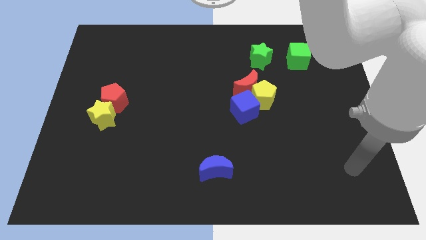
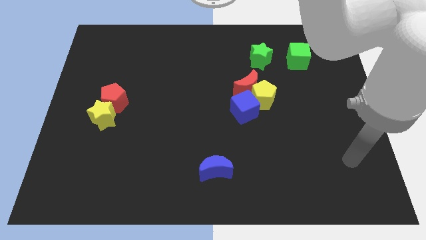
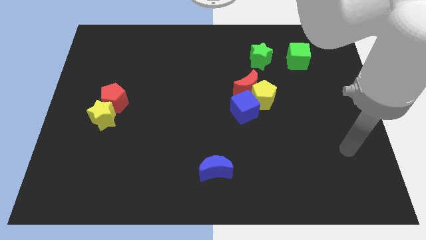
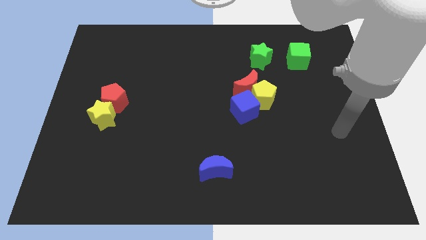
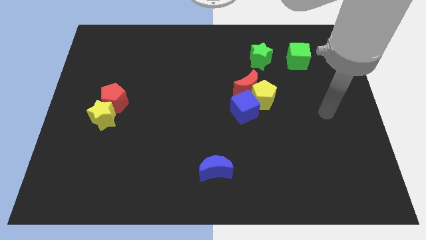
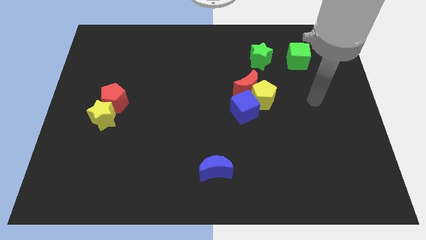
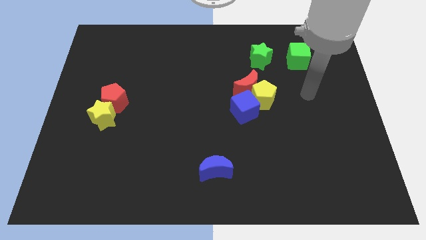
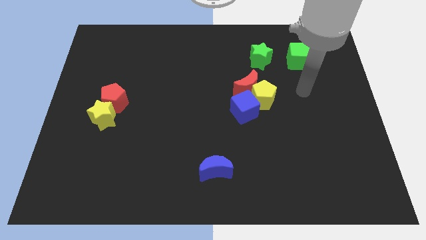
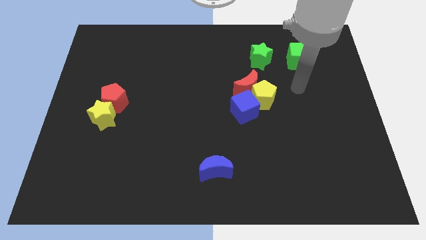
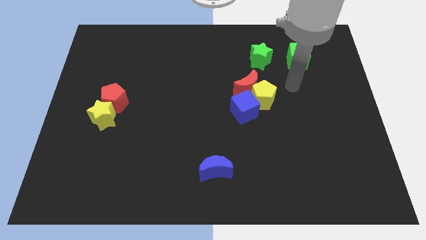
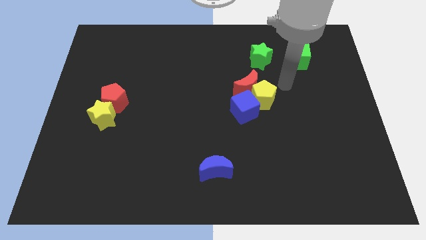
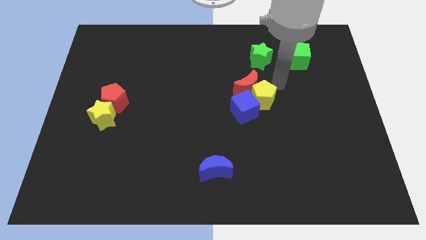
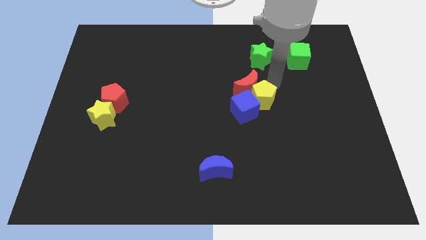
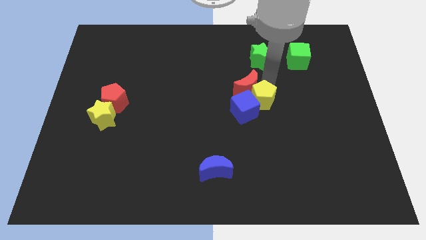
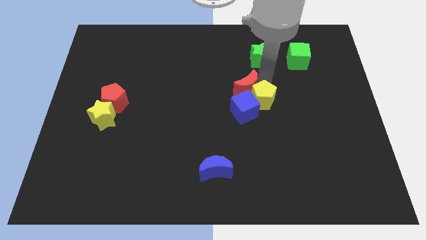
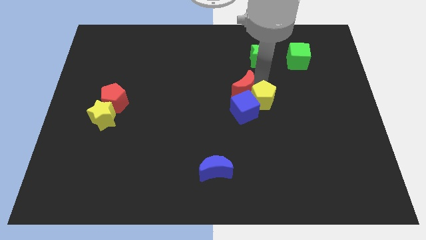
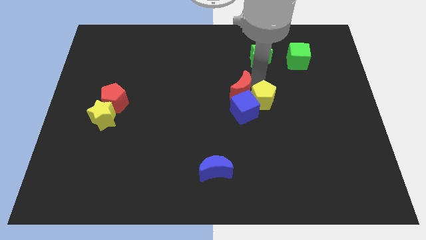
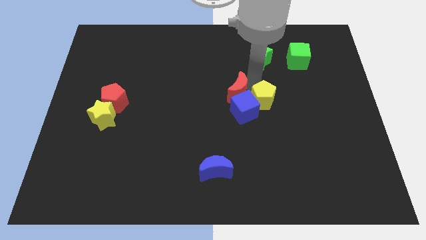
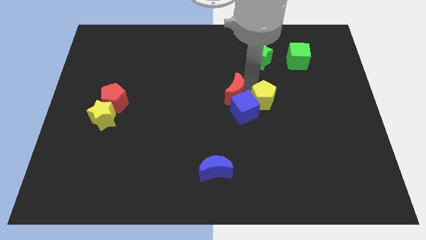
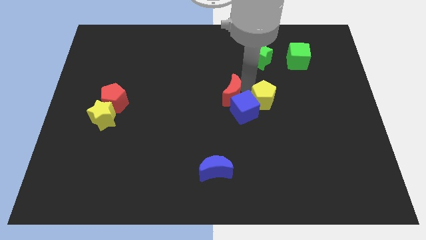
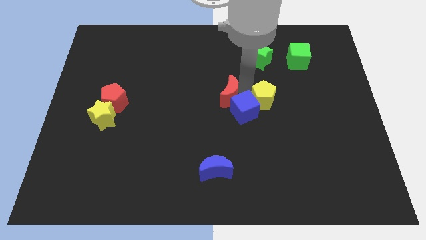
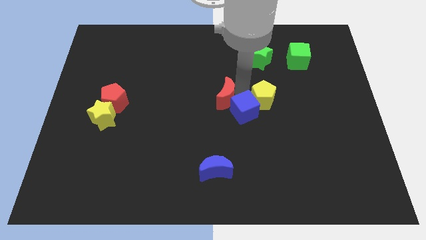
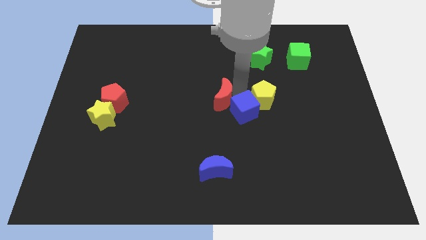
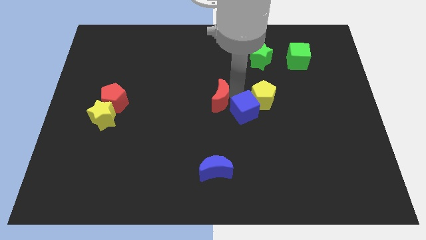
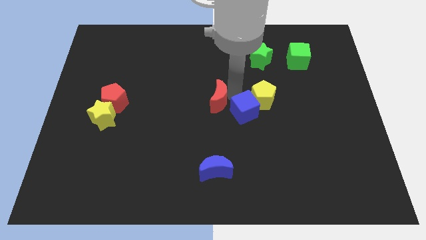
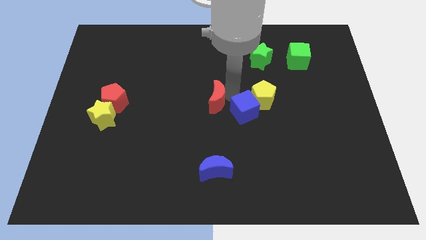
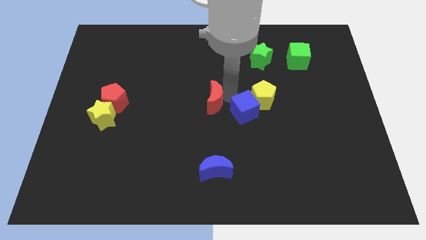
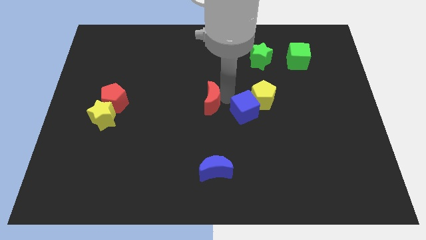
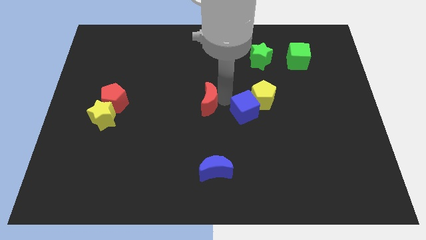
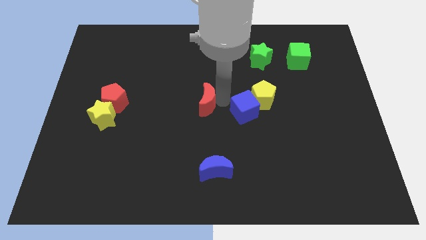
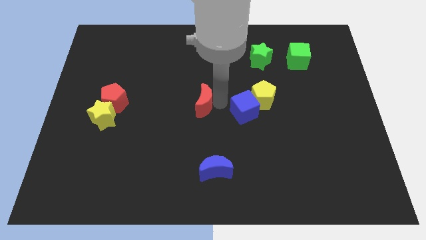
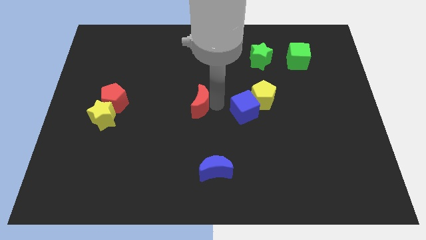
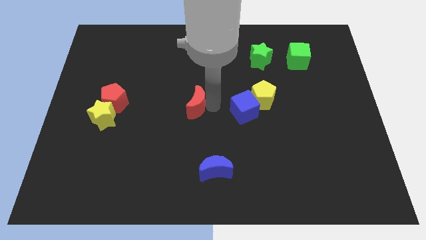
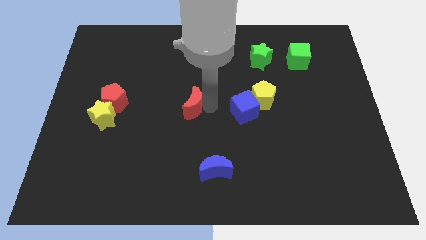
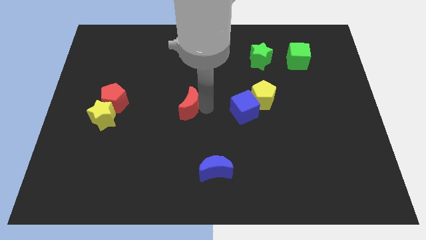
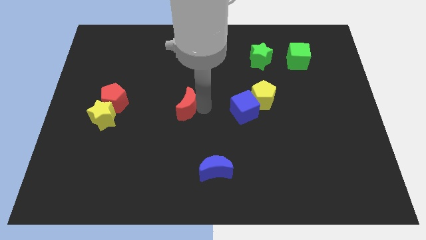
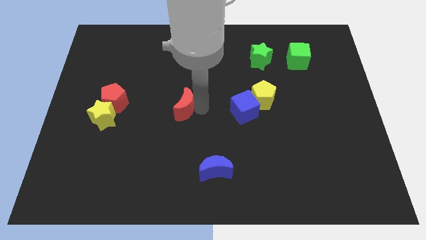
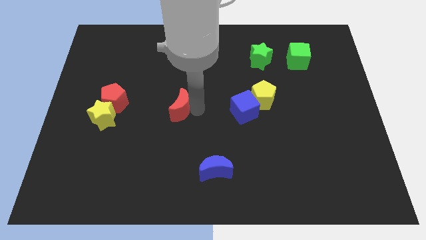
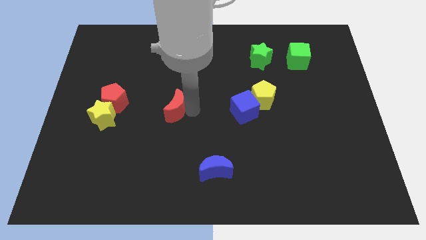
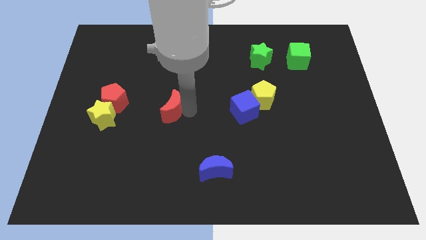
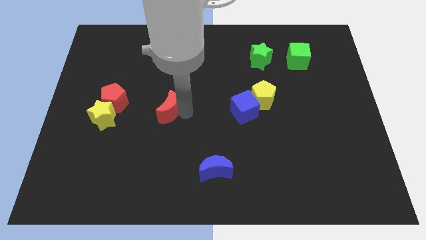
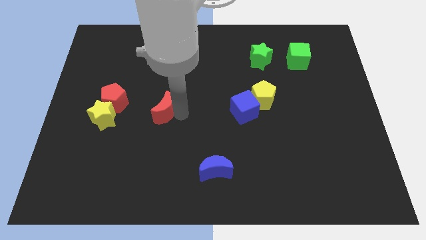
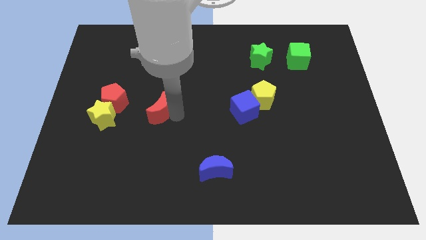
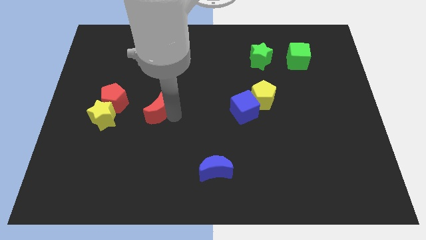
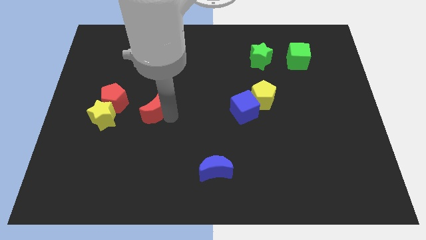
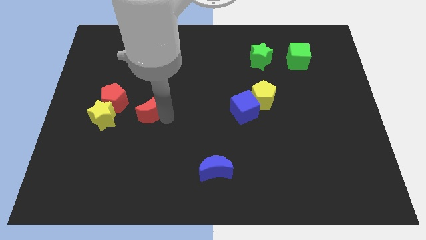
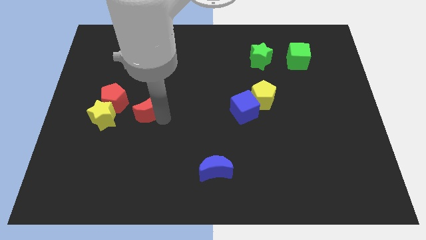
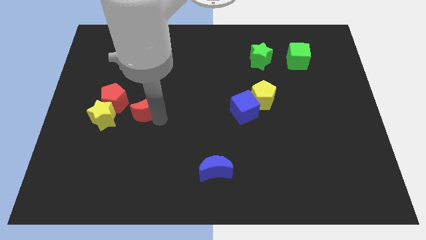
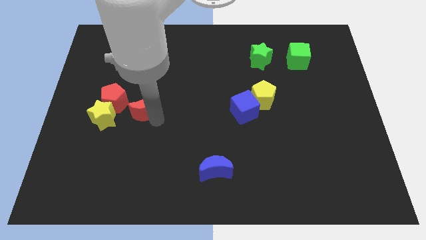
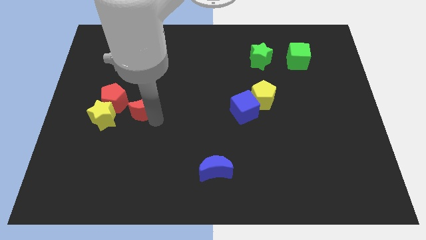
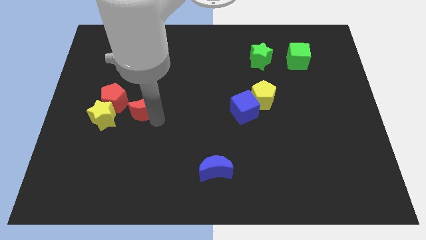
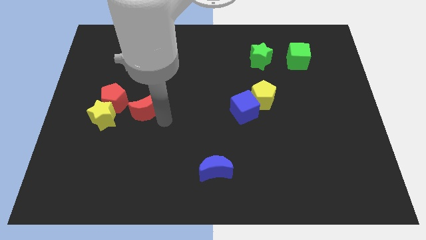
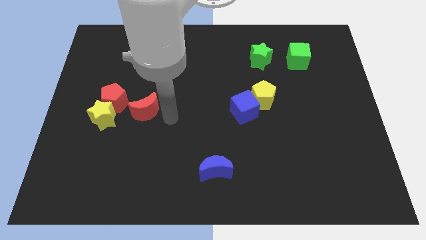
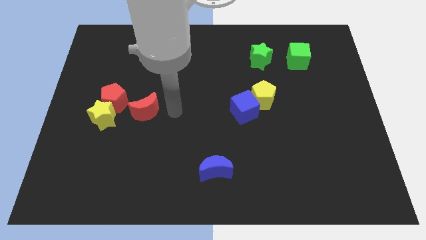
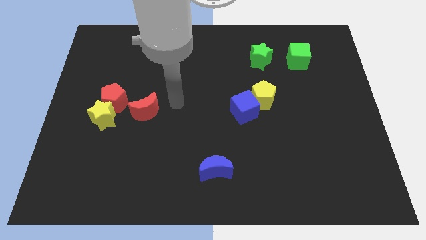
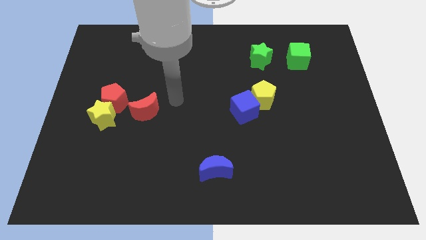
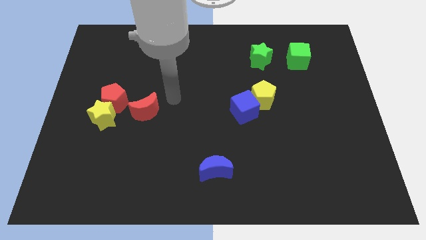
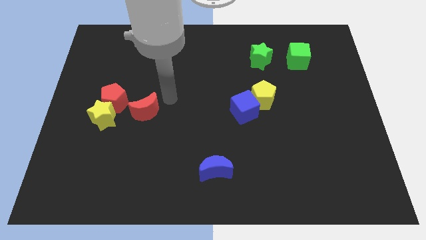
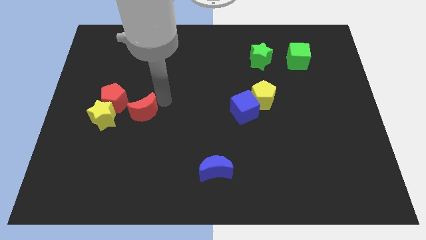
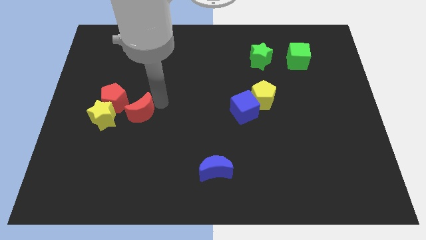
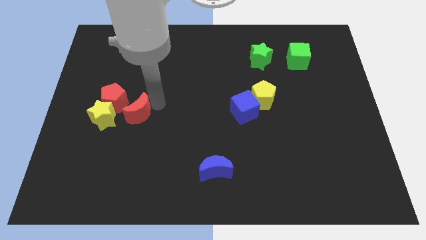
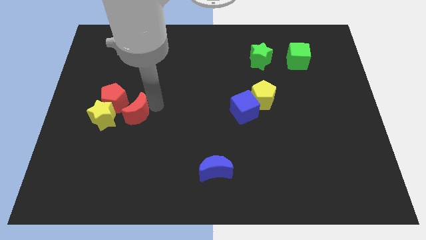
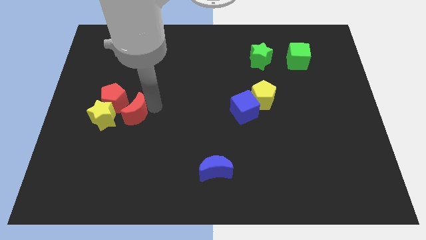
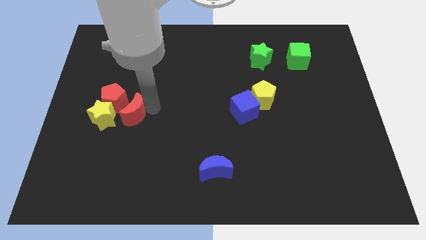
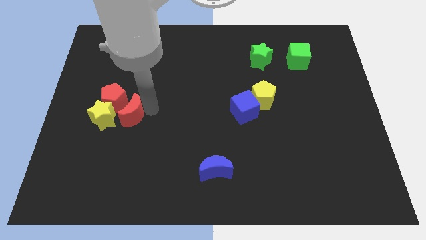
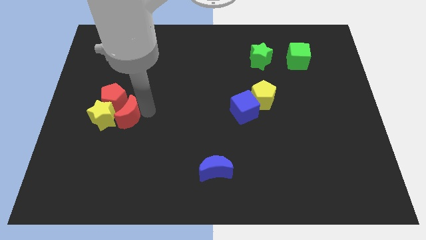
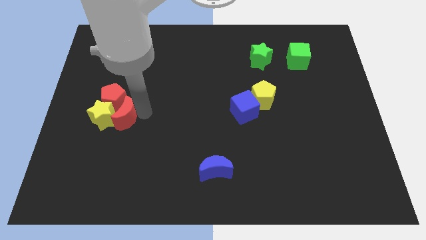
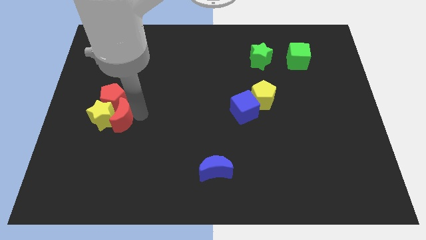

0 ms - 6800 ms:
push the red moon towards the yellow star

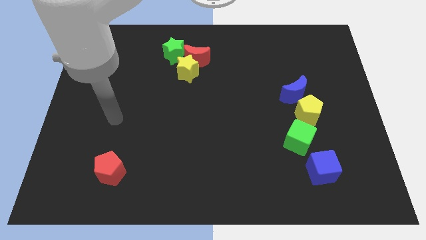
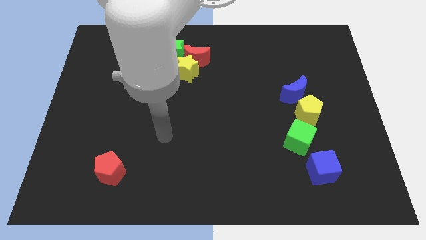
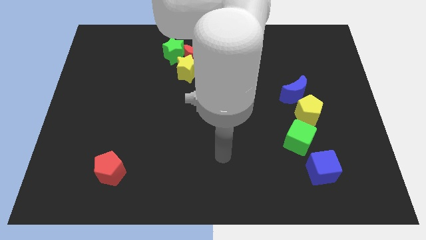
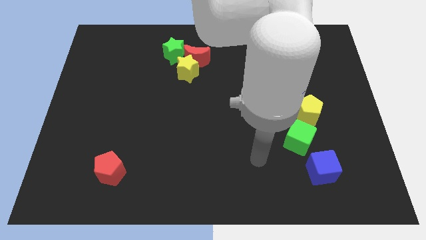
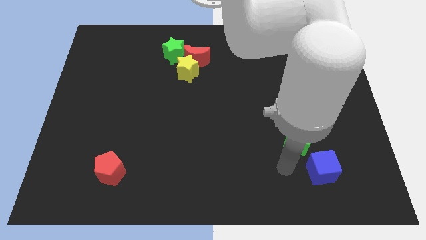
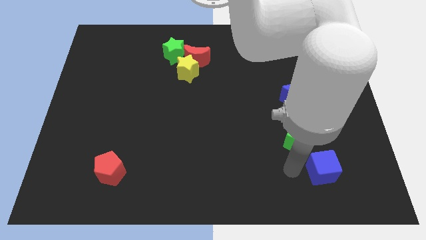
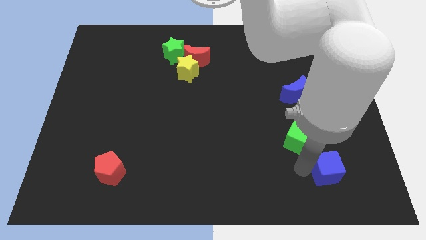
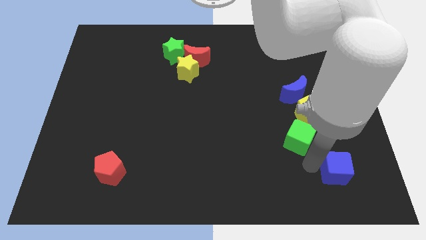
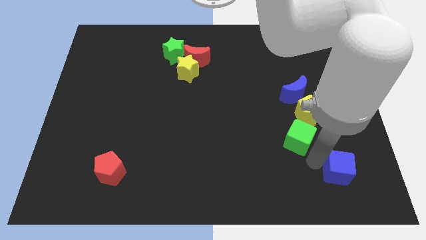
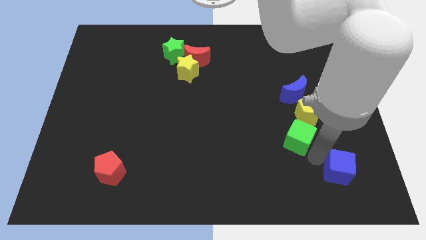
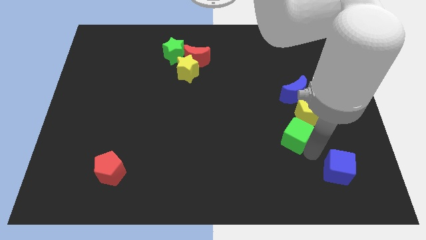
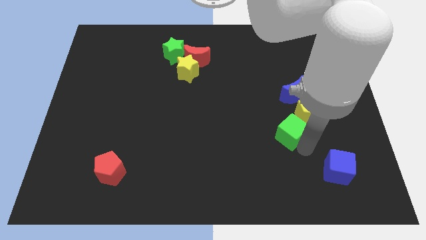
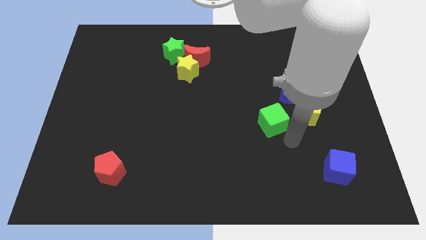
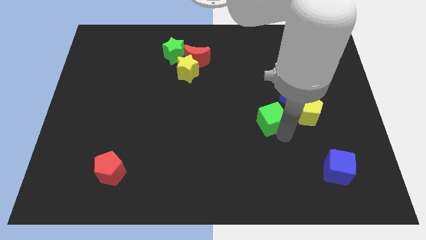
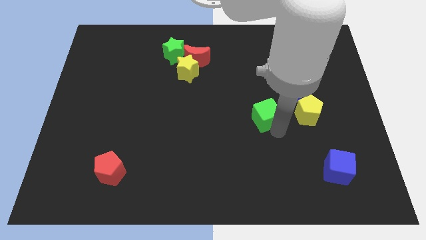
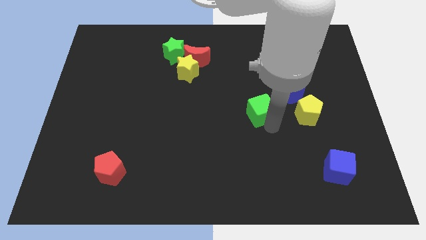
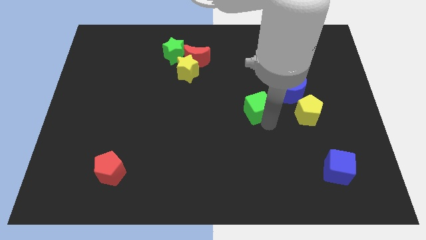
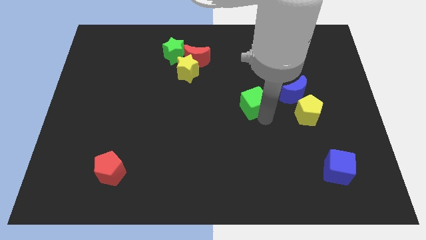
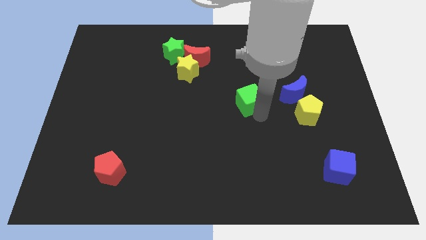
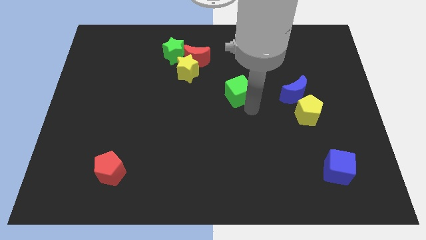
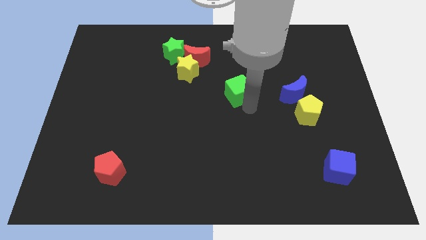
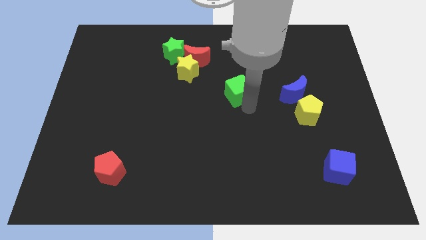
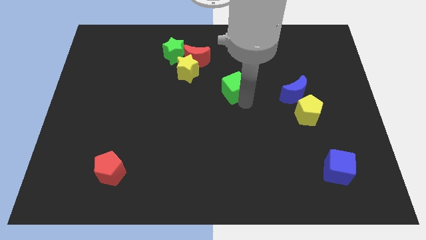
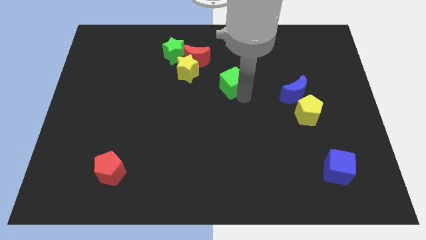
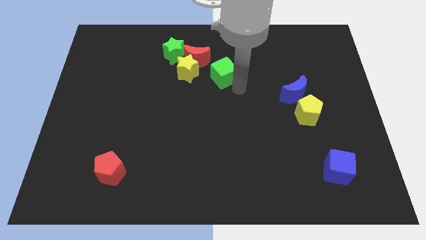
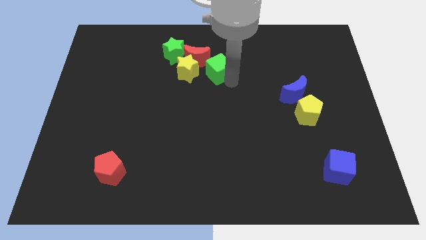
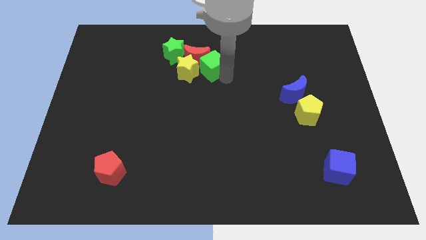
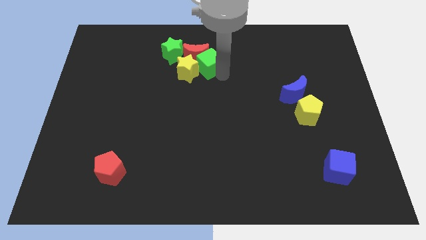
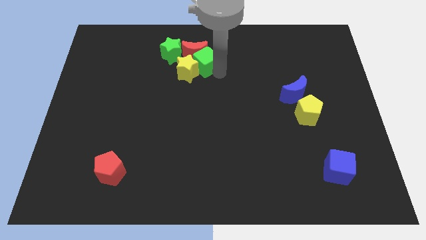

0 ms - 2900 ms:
move the green cube towards the red moon
